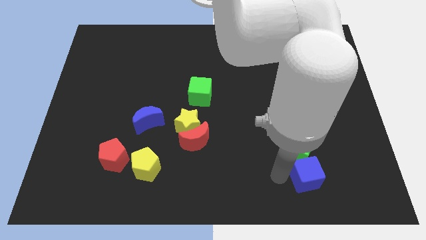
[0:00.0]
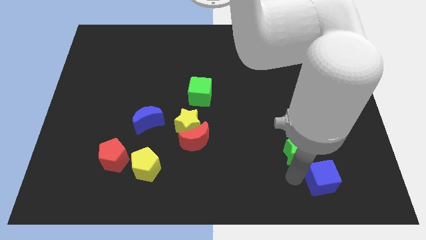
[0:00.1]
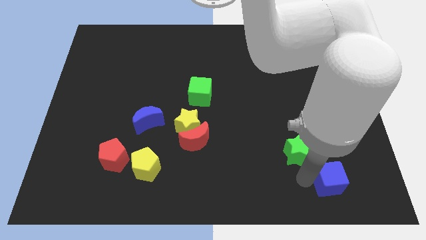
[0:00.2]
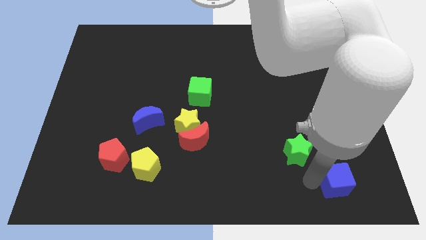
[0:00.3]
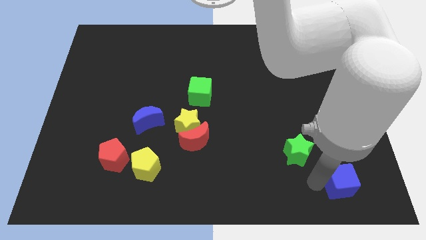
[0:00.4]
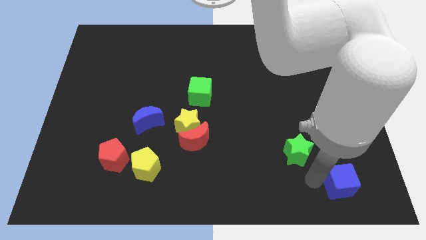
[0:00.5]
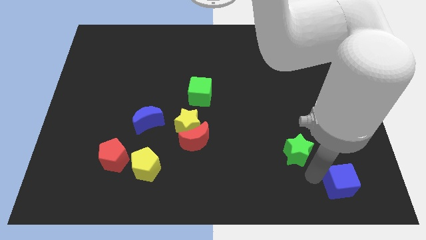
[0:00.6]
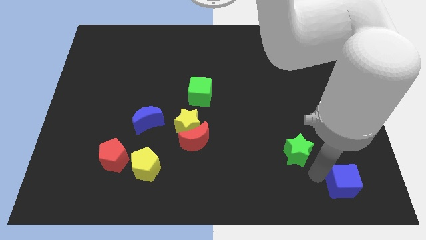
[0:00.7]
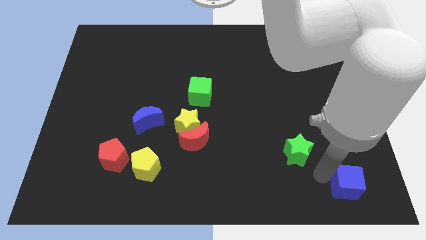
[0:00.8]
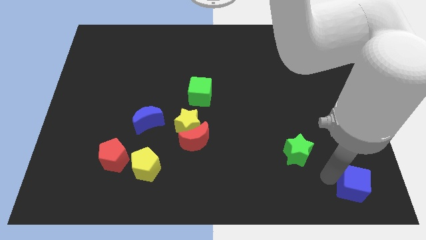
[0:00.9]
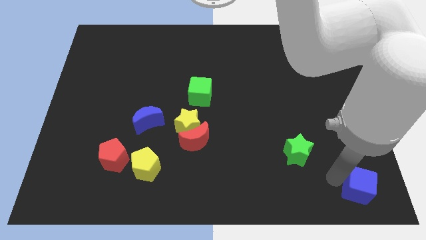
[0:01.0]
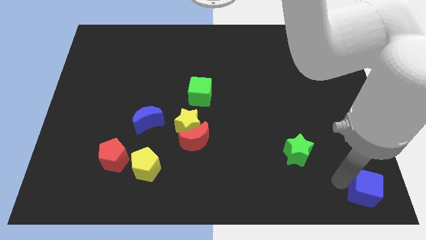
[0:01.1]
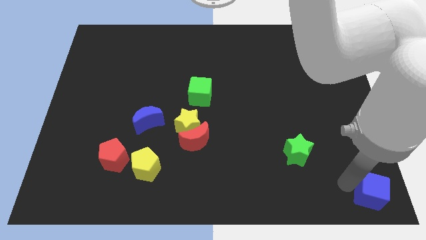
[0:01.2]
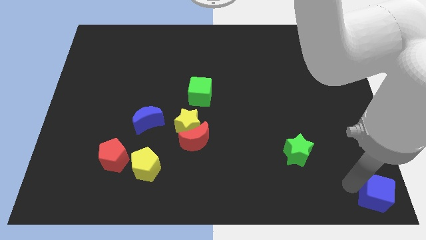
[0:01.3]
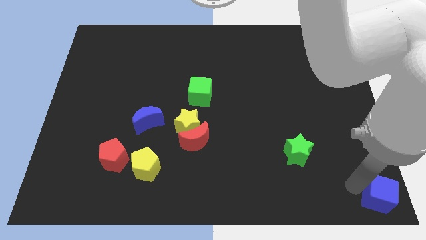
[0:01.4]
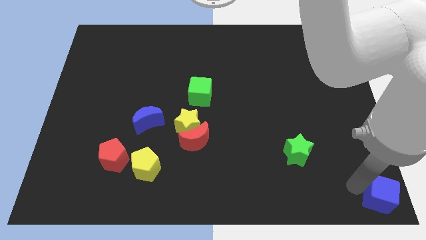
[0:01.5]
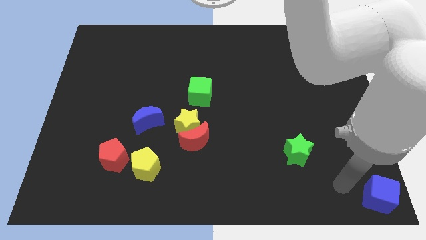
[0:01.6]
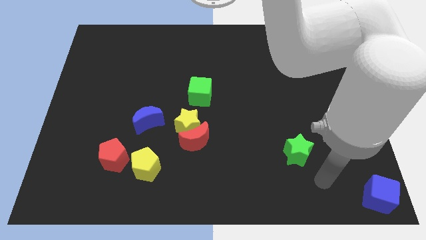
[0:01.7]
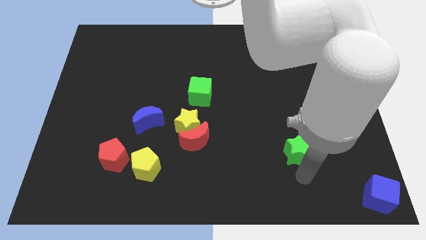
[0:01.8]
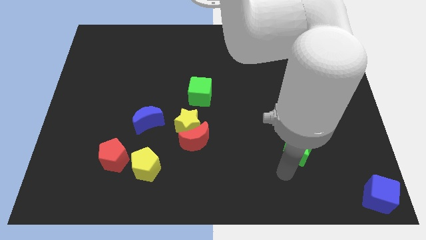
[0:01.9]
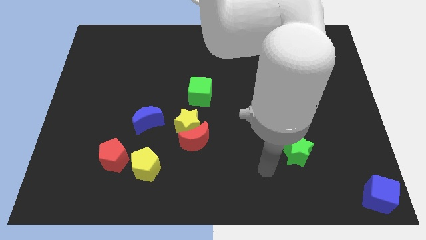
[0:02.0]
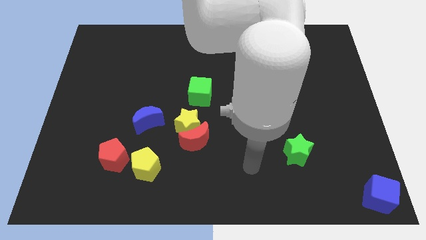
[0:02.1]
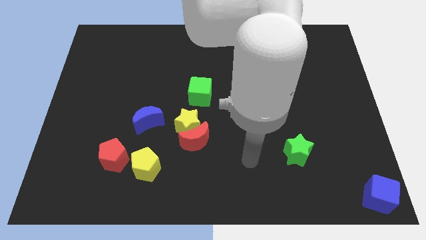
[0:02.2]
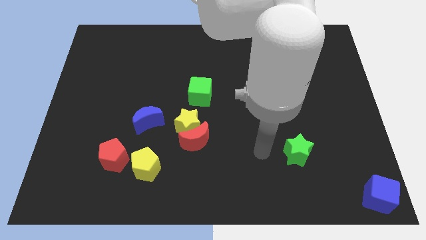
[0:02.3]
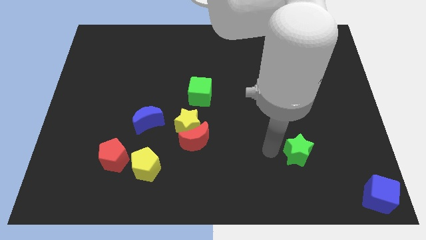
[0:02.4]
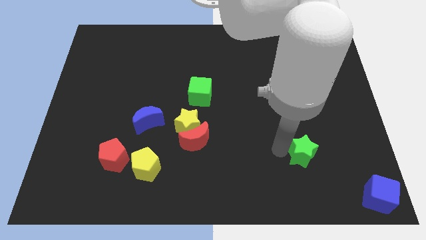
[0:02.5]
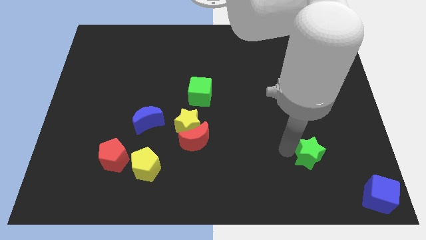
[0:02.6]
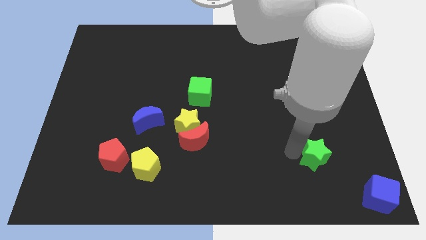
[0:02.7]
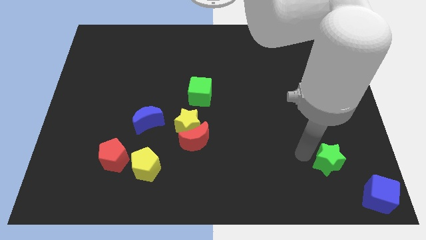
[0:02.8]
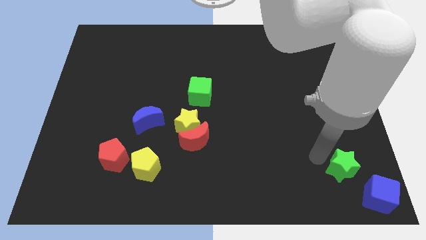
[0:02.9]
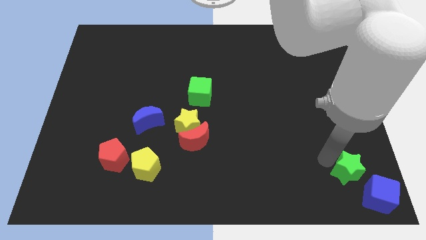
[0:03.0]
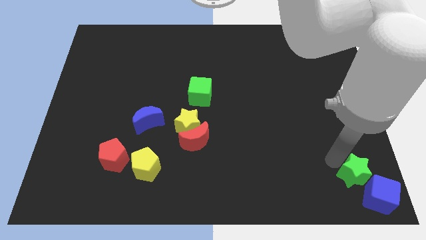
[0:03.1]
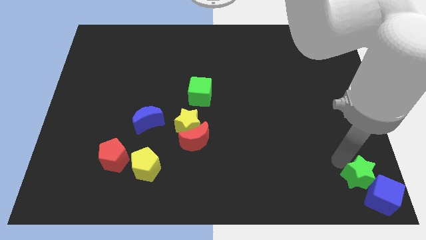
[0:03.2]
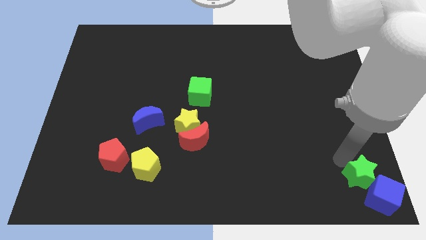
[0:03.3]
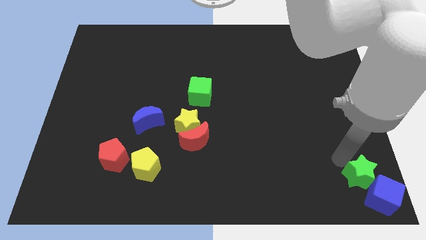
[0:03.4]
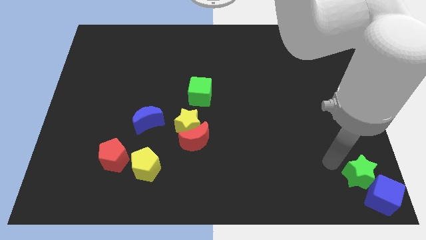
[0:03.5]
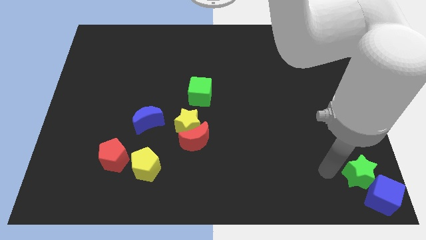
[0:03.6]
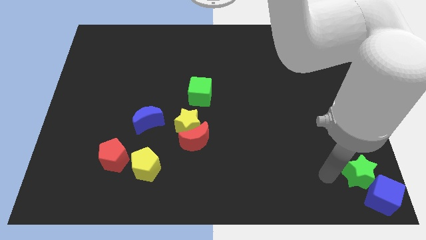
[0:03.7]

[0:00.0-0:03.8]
place the blue cube and green star together at the bottom right corner

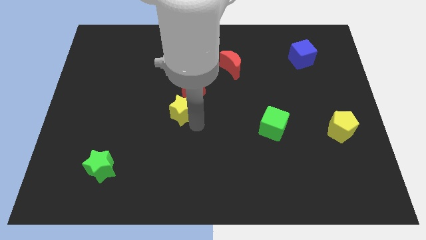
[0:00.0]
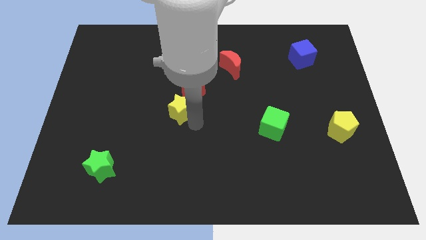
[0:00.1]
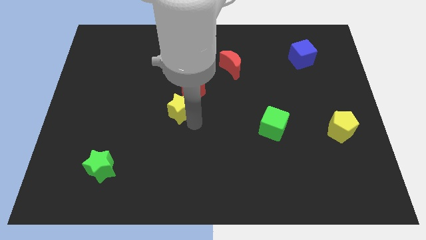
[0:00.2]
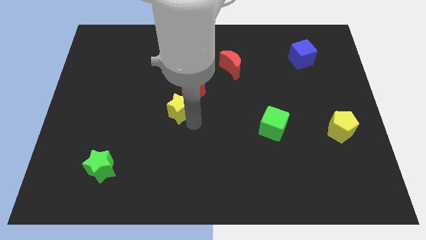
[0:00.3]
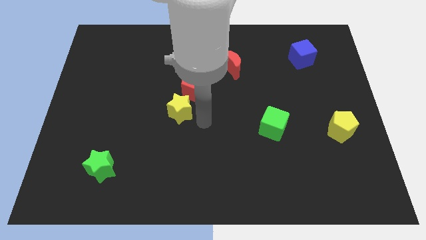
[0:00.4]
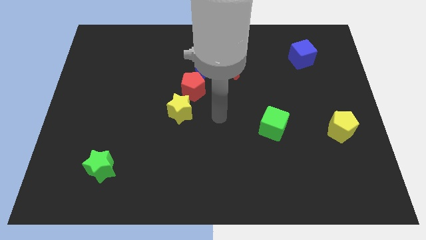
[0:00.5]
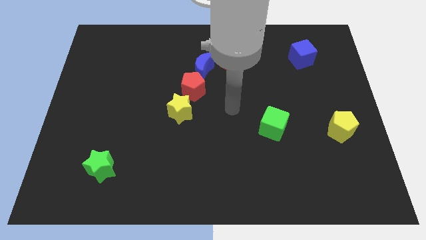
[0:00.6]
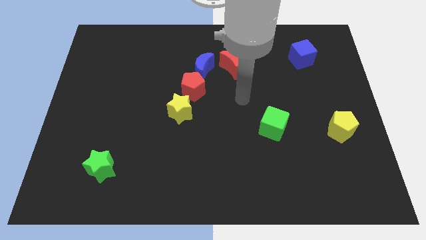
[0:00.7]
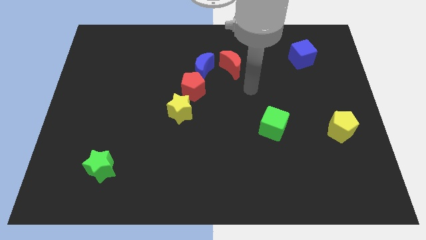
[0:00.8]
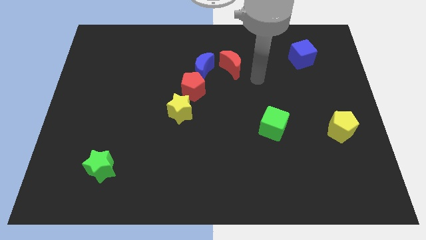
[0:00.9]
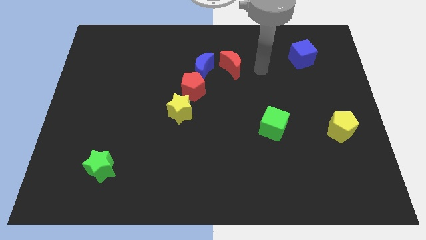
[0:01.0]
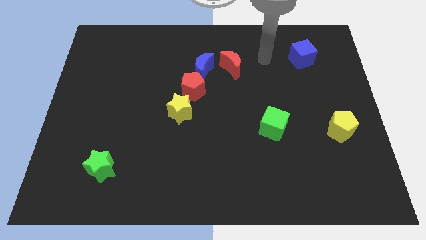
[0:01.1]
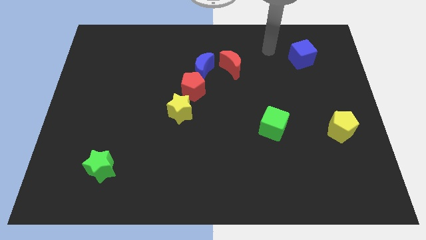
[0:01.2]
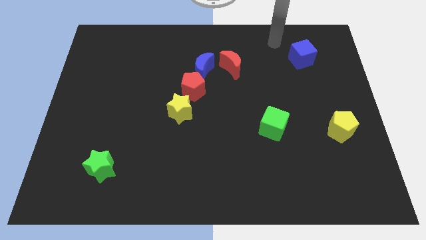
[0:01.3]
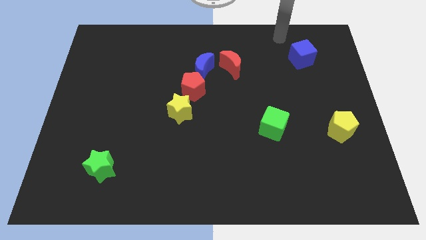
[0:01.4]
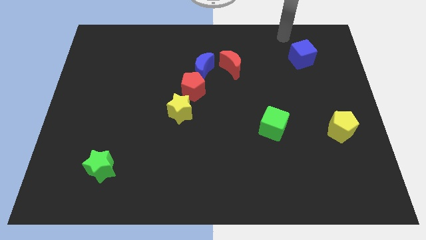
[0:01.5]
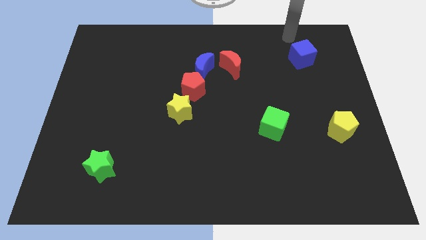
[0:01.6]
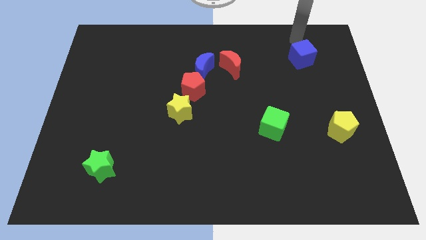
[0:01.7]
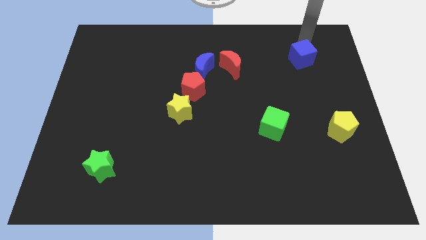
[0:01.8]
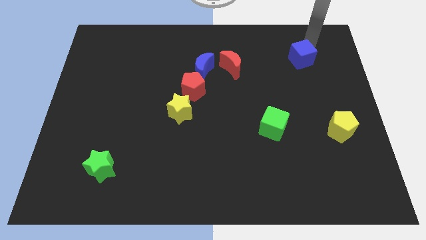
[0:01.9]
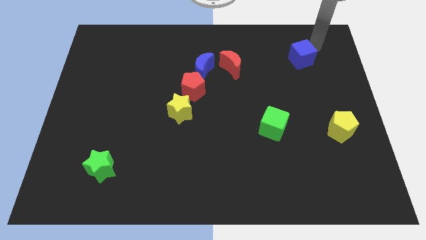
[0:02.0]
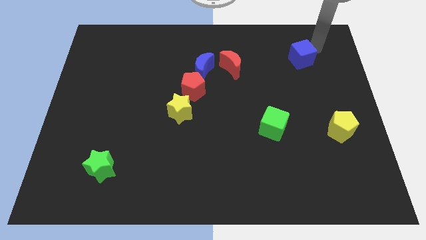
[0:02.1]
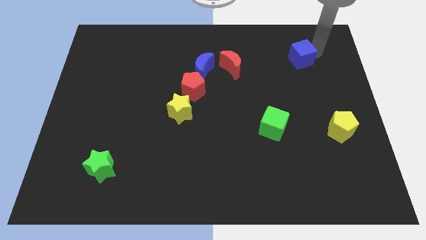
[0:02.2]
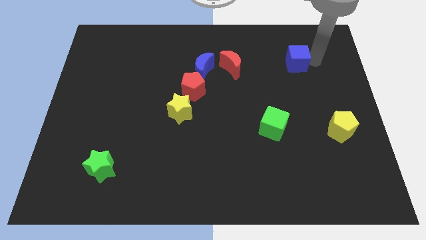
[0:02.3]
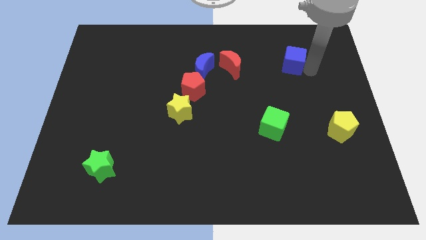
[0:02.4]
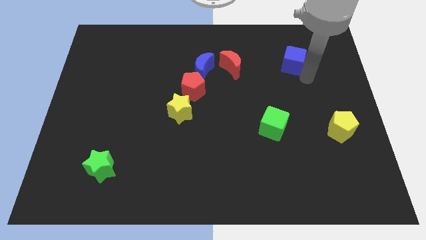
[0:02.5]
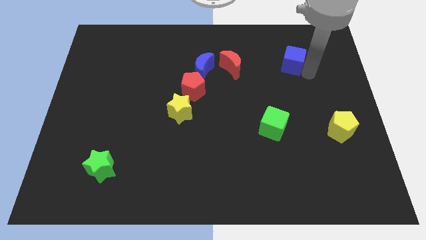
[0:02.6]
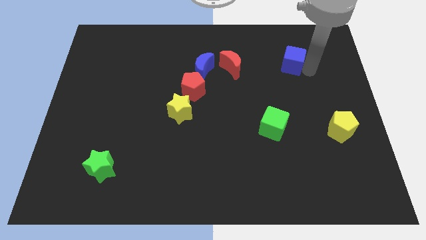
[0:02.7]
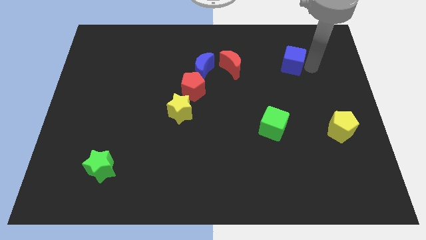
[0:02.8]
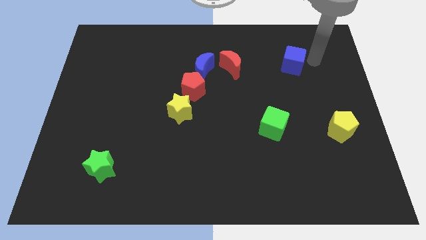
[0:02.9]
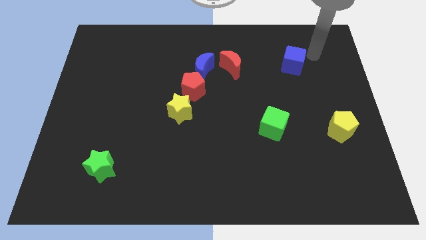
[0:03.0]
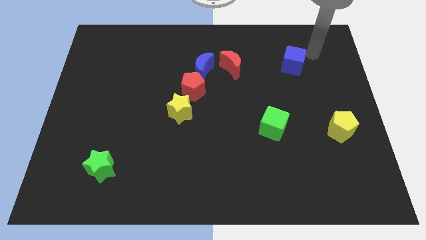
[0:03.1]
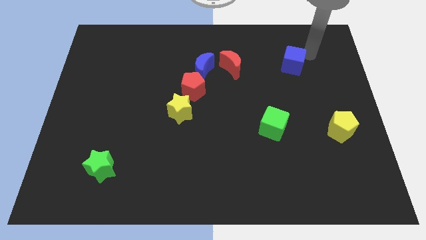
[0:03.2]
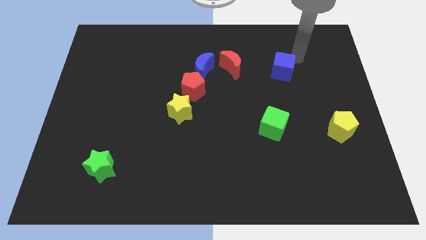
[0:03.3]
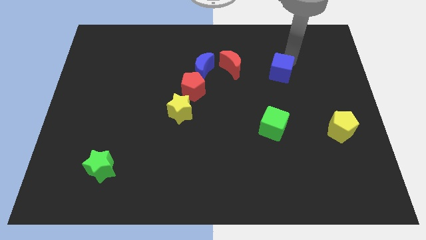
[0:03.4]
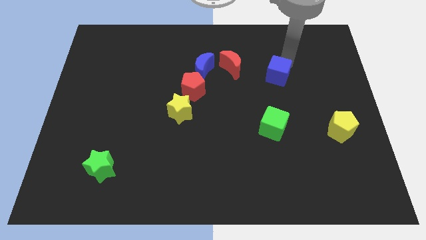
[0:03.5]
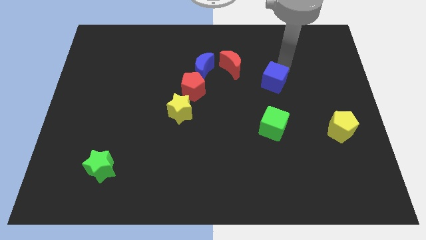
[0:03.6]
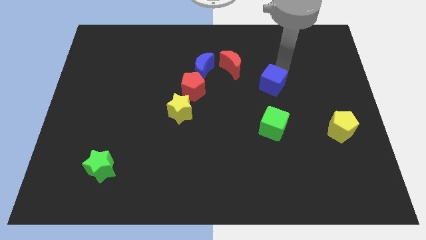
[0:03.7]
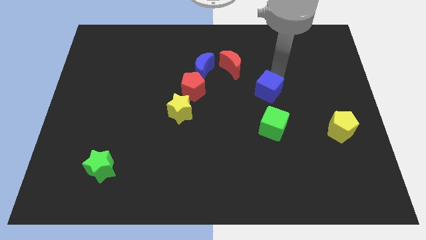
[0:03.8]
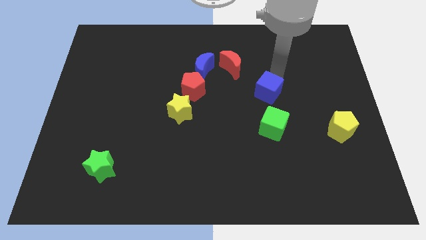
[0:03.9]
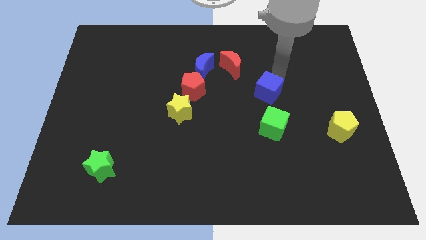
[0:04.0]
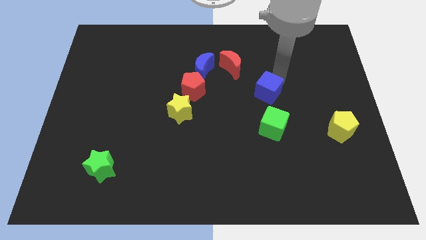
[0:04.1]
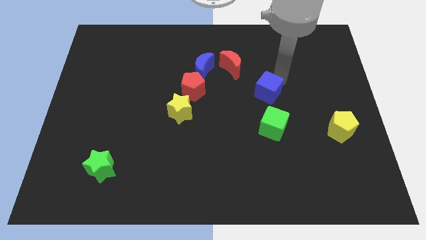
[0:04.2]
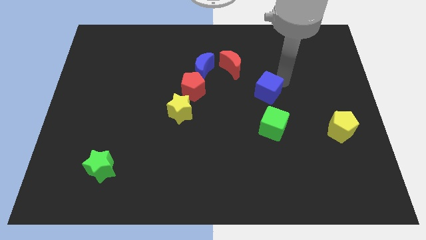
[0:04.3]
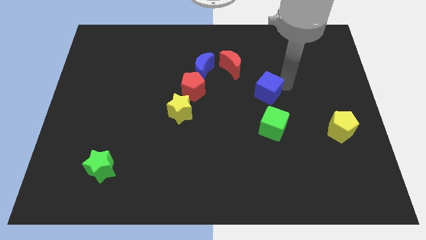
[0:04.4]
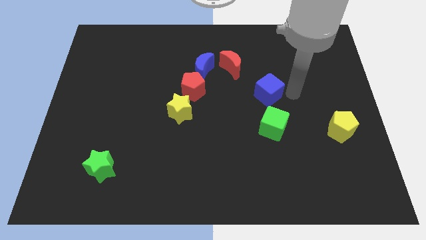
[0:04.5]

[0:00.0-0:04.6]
push the blue cube towards the top side of the green cube

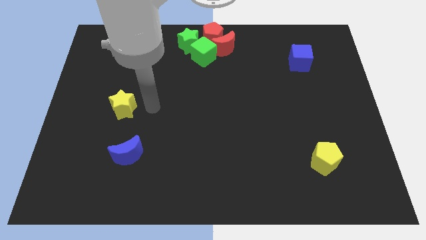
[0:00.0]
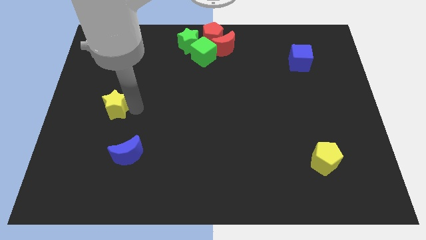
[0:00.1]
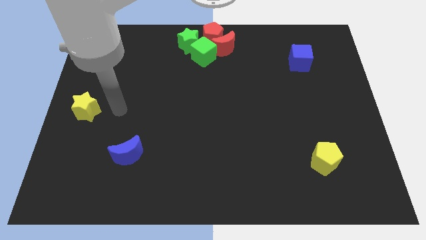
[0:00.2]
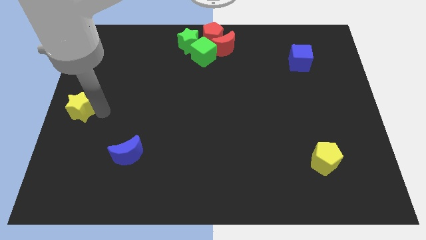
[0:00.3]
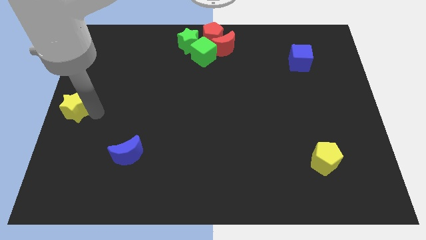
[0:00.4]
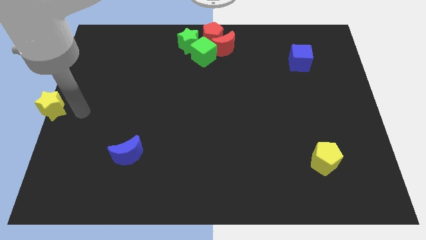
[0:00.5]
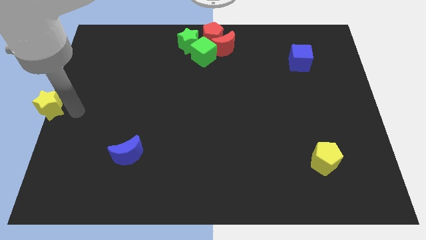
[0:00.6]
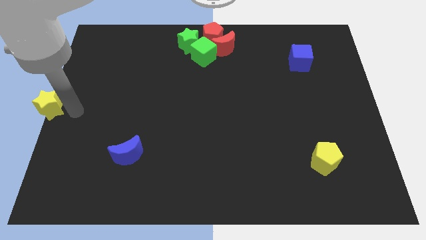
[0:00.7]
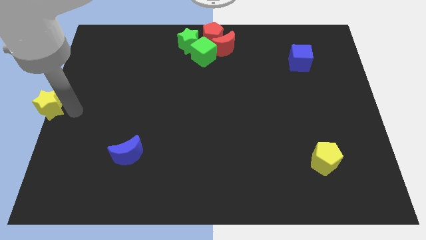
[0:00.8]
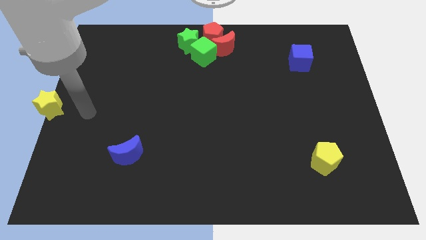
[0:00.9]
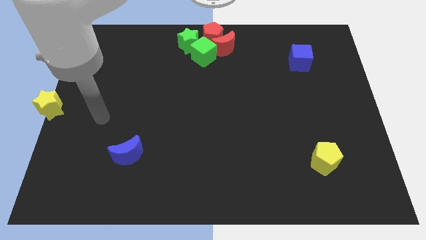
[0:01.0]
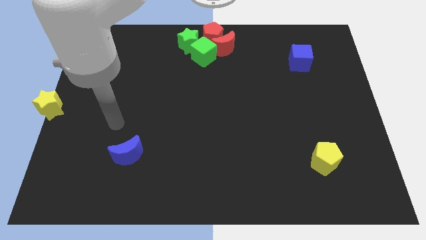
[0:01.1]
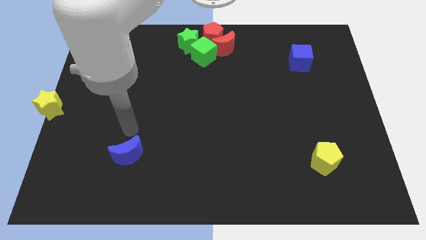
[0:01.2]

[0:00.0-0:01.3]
place the yellow star towards the center left of the board
